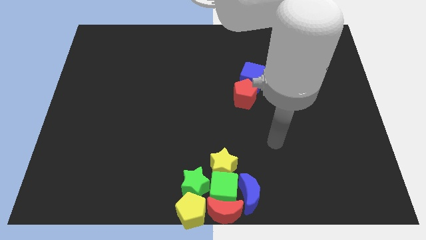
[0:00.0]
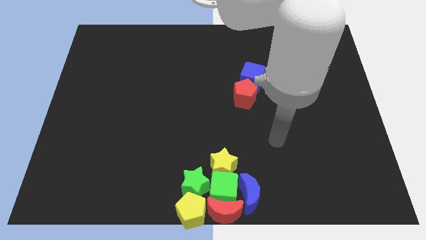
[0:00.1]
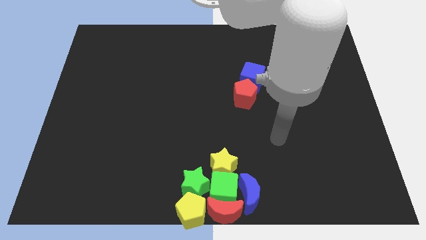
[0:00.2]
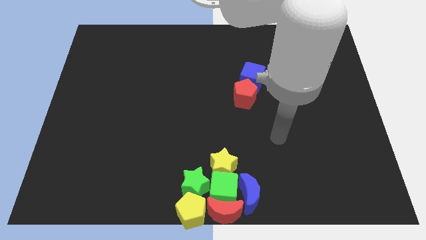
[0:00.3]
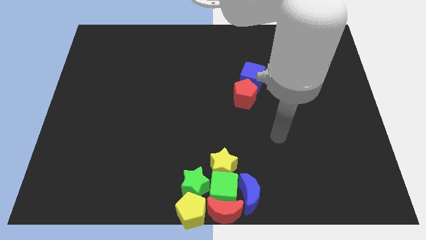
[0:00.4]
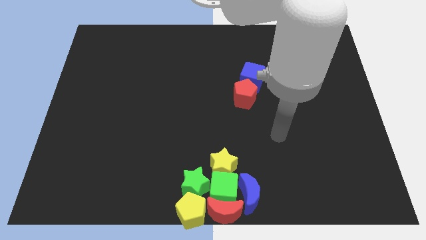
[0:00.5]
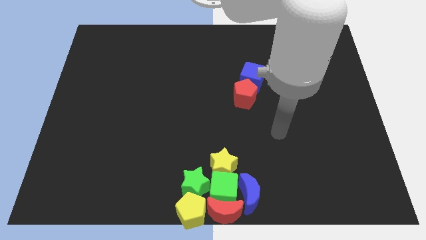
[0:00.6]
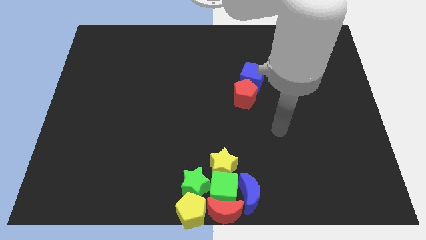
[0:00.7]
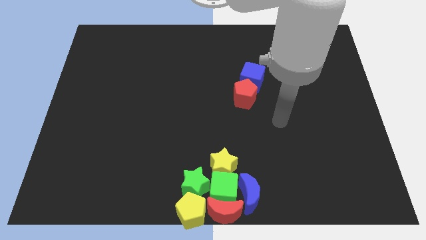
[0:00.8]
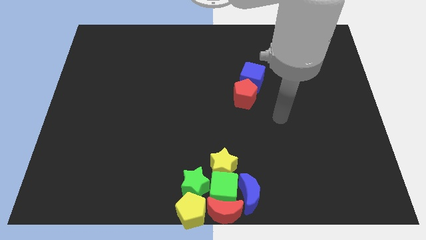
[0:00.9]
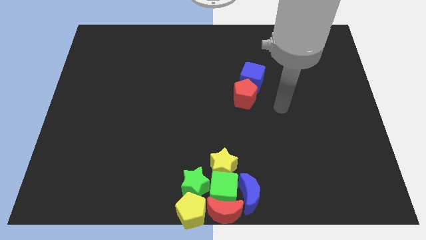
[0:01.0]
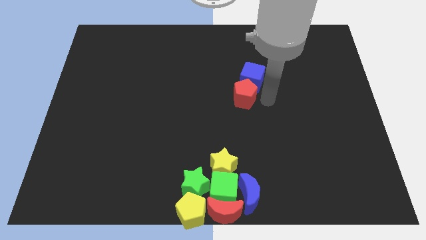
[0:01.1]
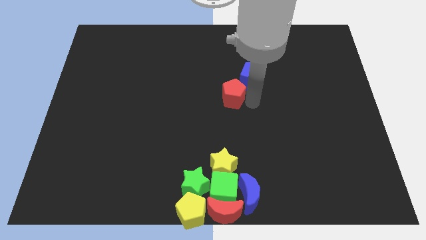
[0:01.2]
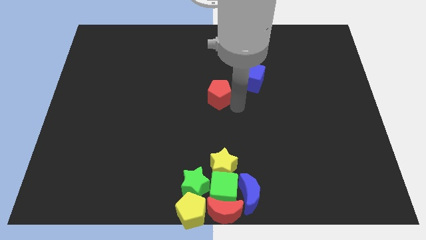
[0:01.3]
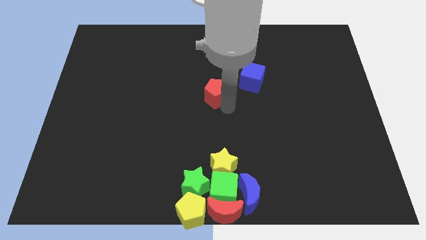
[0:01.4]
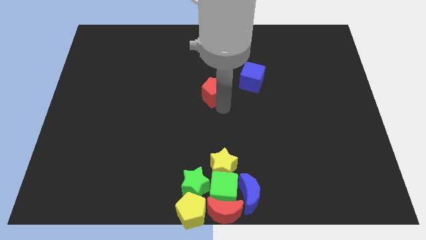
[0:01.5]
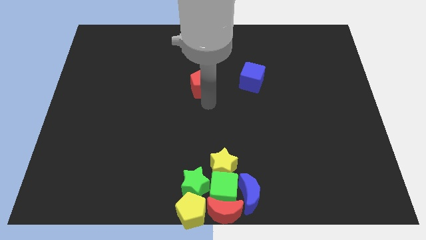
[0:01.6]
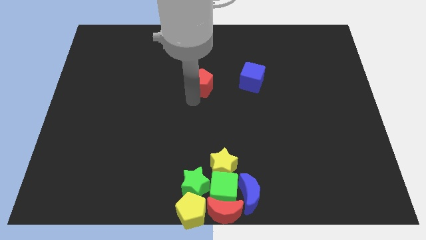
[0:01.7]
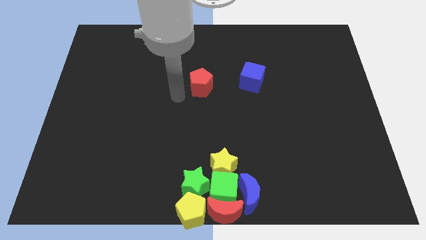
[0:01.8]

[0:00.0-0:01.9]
move the red pentagon away from the blue cube

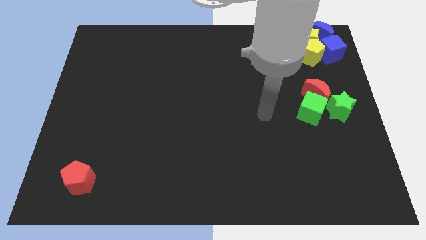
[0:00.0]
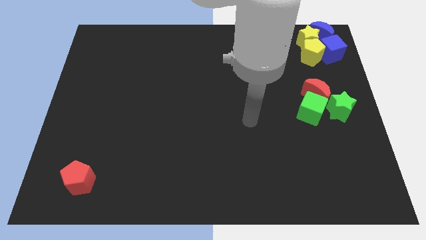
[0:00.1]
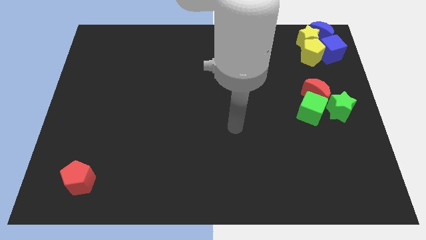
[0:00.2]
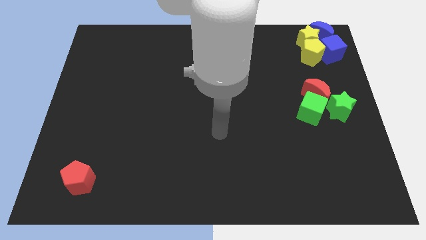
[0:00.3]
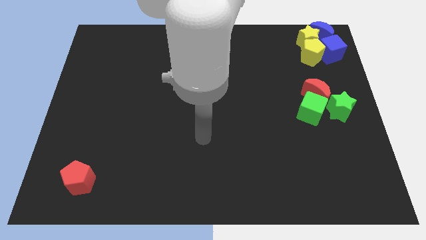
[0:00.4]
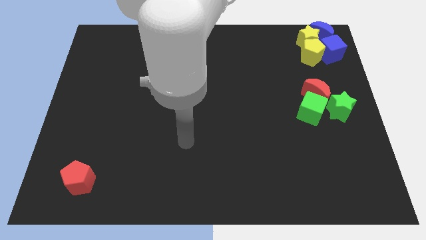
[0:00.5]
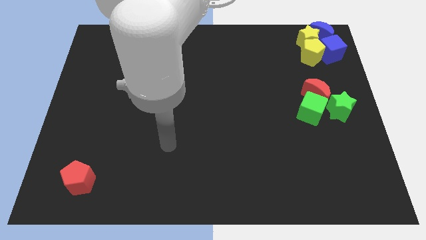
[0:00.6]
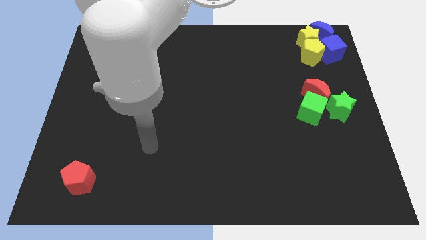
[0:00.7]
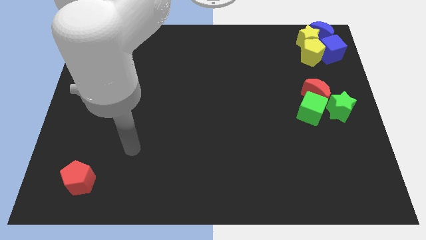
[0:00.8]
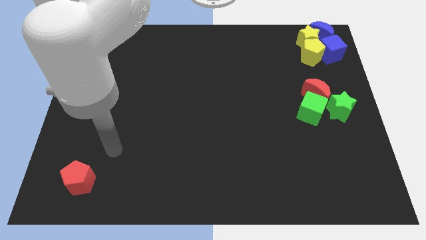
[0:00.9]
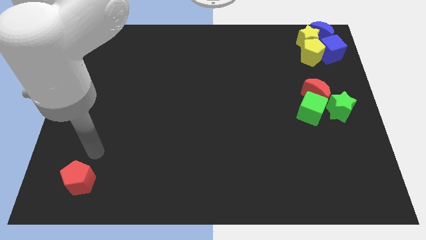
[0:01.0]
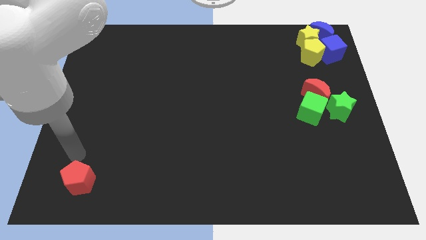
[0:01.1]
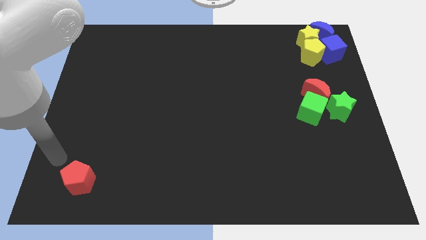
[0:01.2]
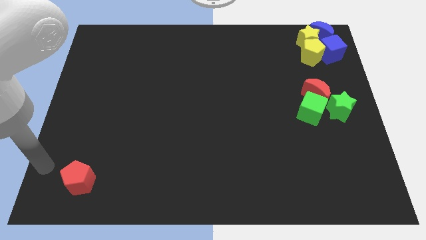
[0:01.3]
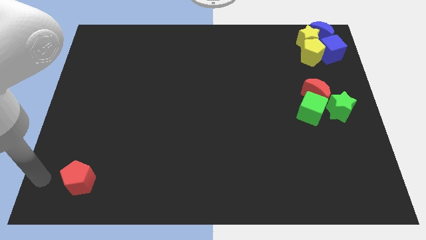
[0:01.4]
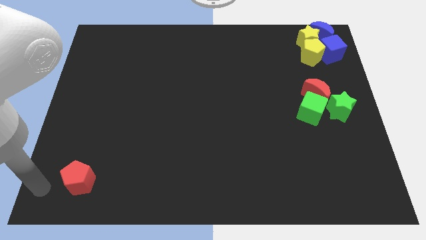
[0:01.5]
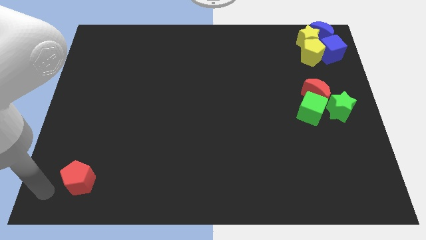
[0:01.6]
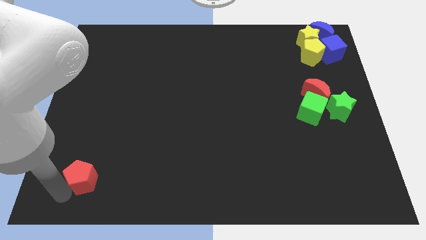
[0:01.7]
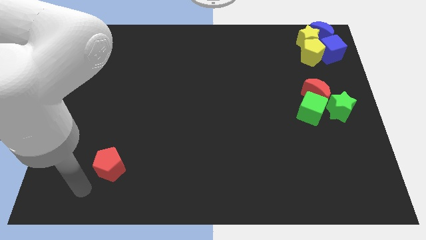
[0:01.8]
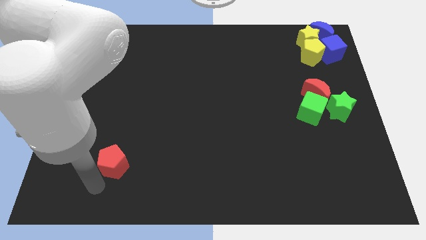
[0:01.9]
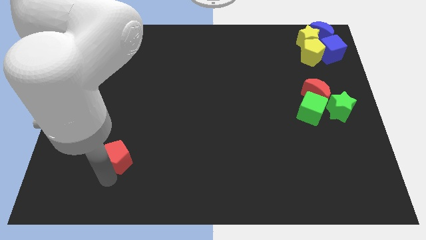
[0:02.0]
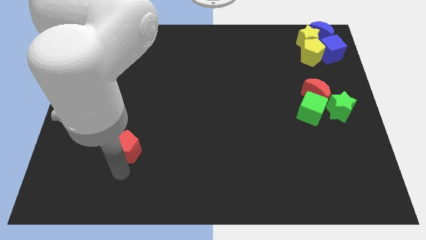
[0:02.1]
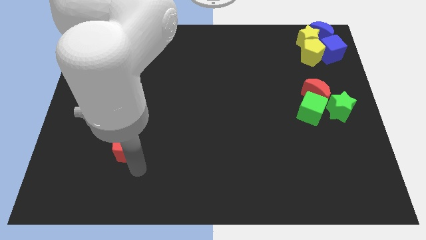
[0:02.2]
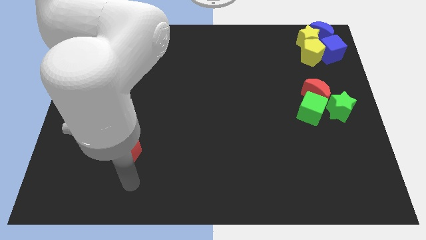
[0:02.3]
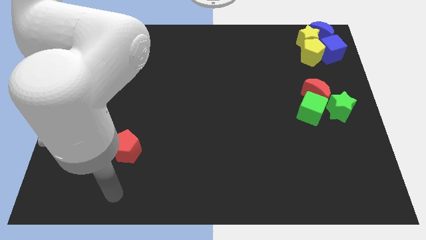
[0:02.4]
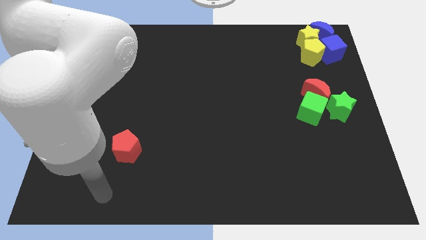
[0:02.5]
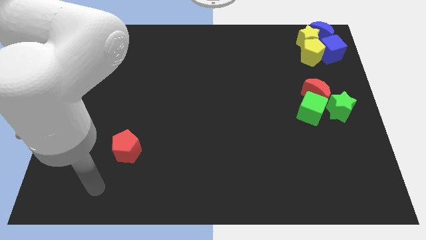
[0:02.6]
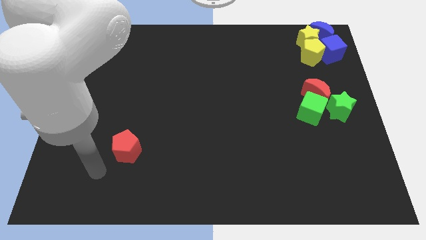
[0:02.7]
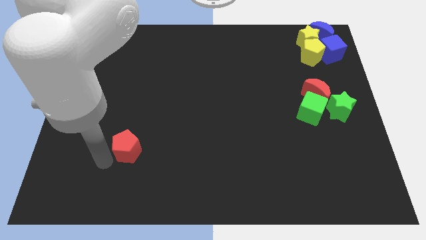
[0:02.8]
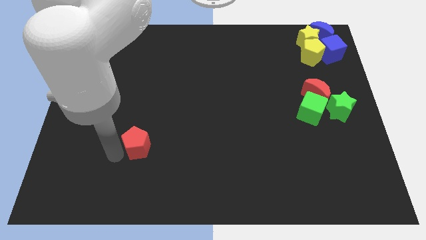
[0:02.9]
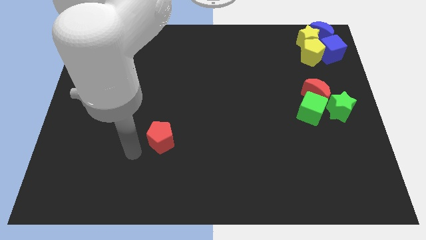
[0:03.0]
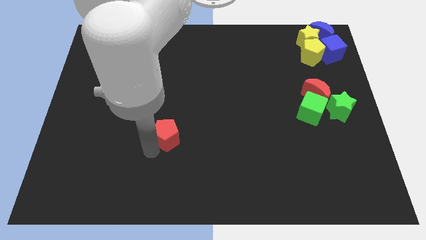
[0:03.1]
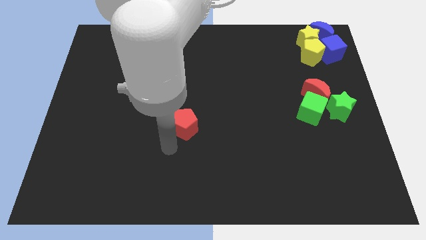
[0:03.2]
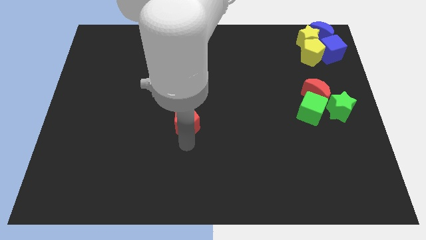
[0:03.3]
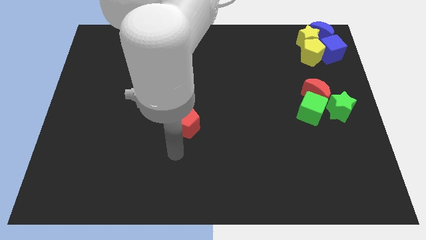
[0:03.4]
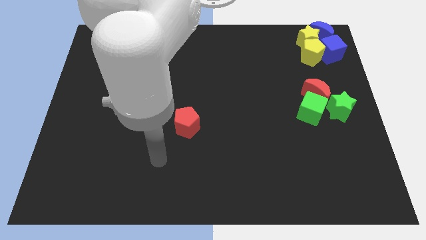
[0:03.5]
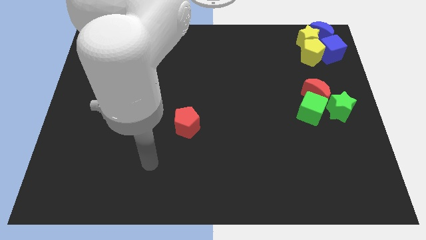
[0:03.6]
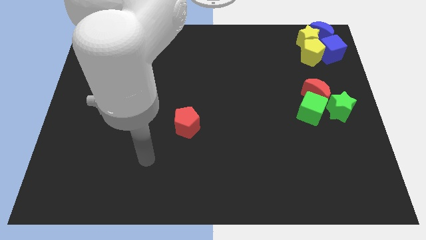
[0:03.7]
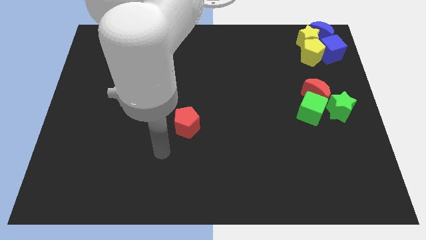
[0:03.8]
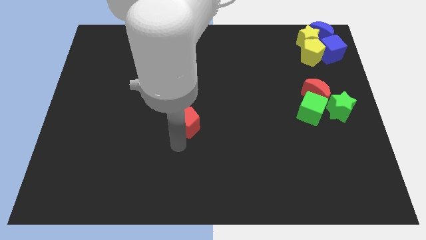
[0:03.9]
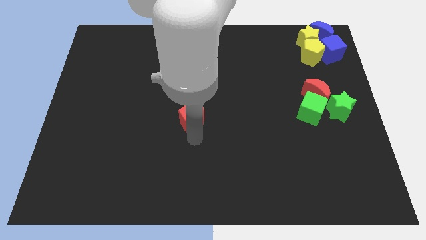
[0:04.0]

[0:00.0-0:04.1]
drag the red pentagon towards the center of the board

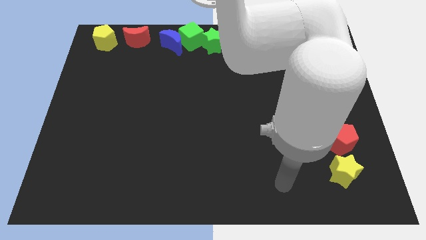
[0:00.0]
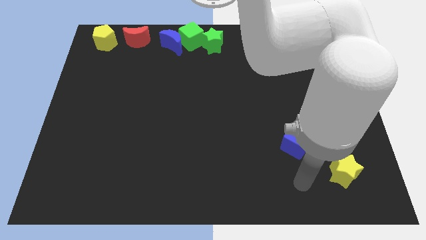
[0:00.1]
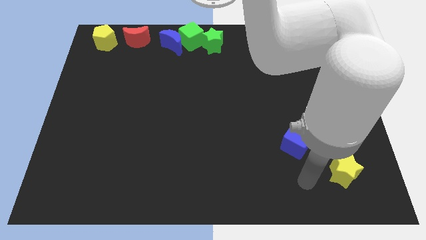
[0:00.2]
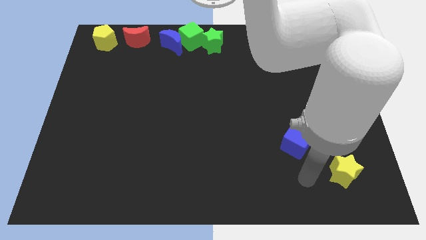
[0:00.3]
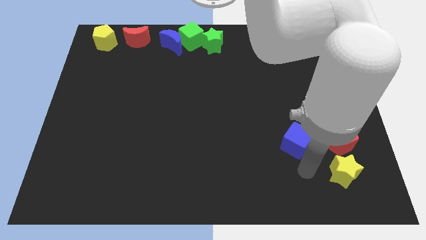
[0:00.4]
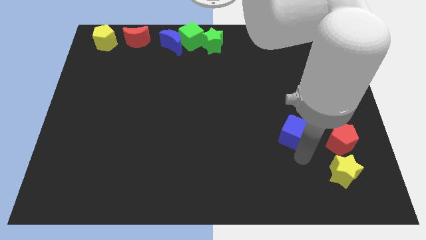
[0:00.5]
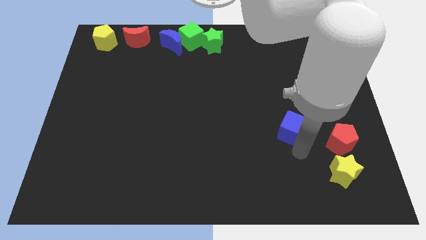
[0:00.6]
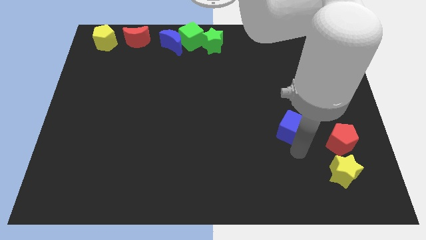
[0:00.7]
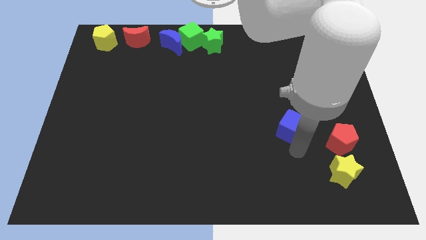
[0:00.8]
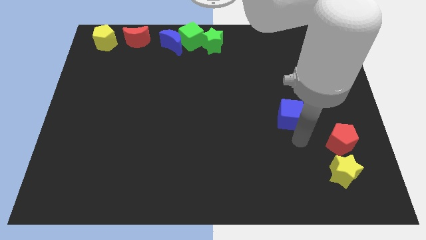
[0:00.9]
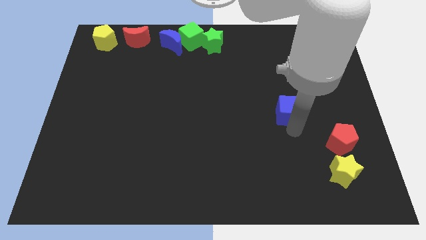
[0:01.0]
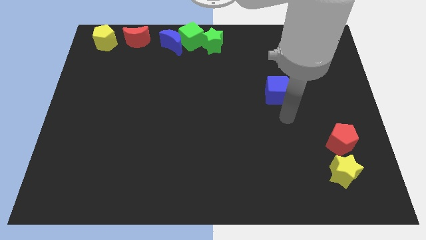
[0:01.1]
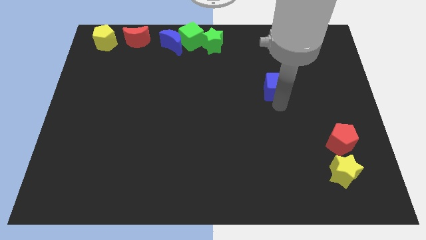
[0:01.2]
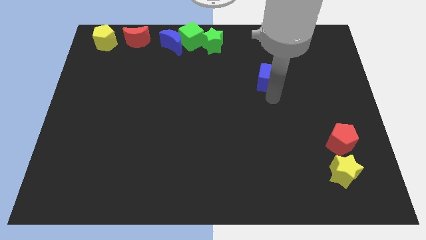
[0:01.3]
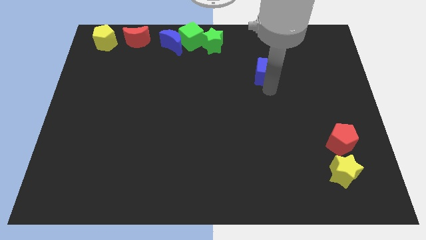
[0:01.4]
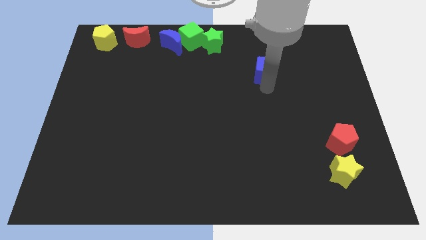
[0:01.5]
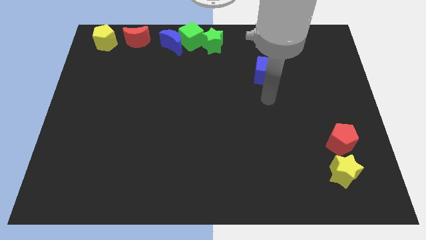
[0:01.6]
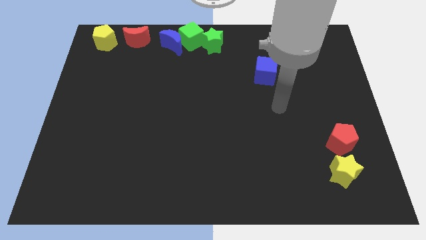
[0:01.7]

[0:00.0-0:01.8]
move the blue cube towards the top

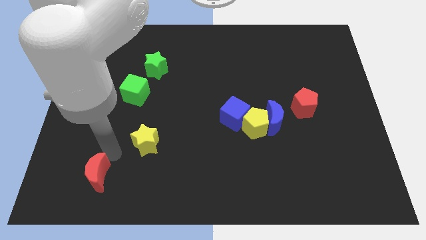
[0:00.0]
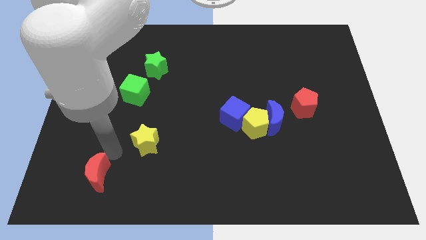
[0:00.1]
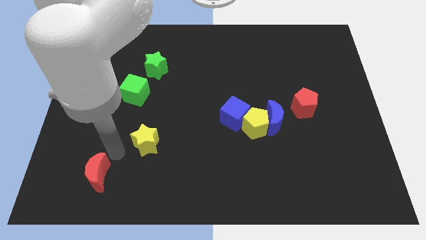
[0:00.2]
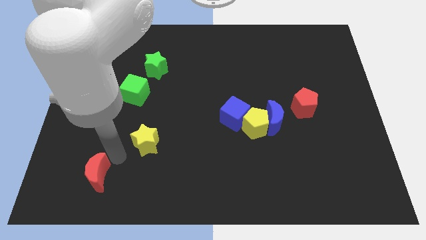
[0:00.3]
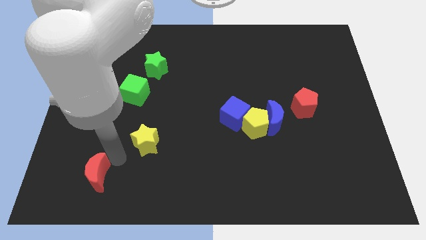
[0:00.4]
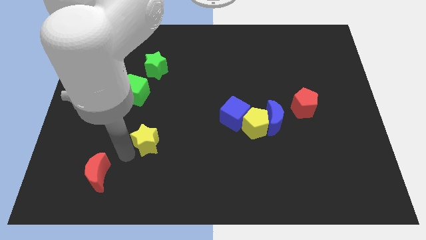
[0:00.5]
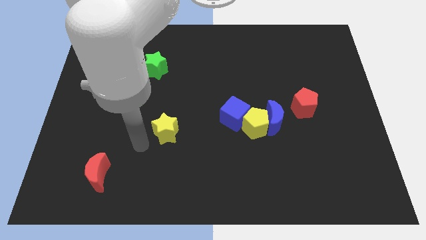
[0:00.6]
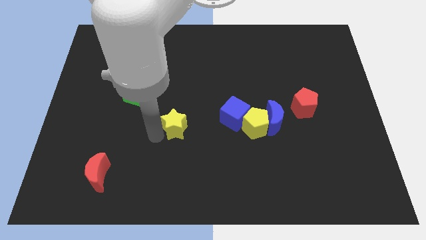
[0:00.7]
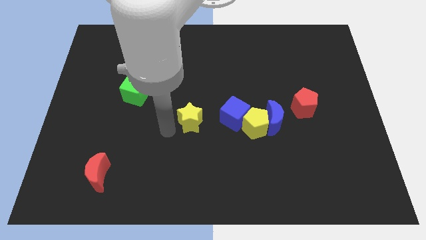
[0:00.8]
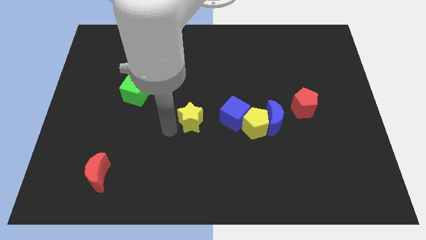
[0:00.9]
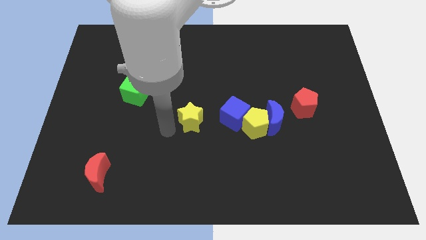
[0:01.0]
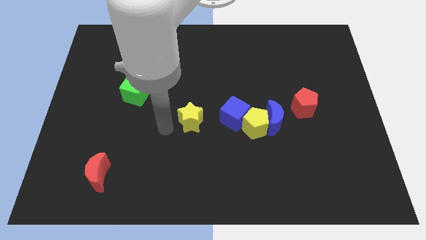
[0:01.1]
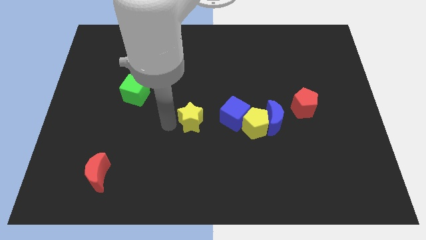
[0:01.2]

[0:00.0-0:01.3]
push the yellow star to the left of blue cube
